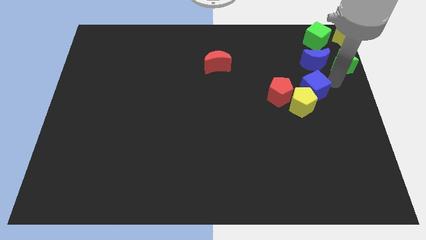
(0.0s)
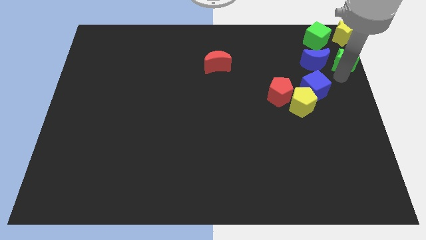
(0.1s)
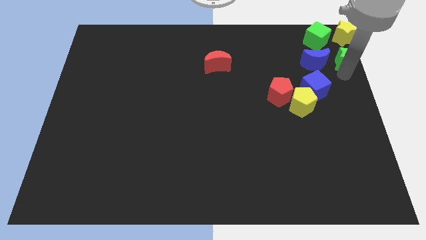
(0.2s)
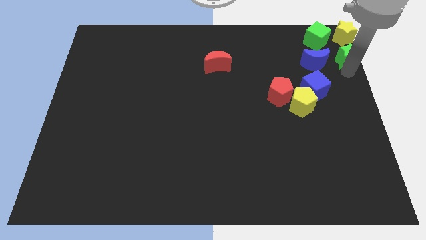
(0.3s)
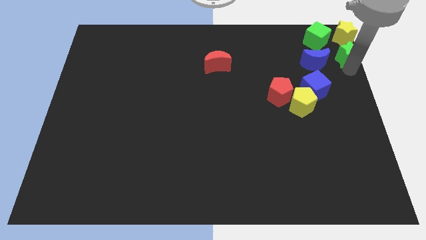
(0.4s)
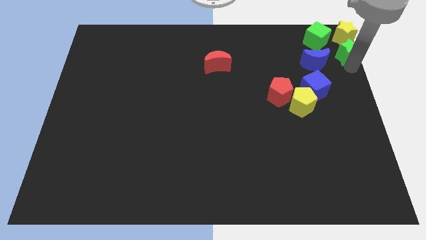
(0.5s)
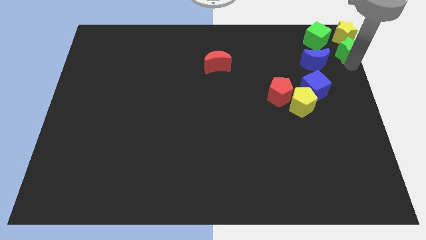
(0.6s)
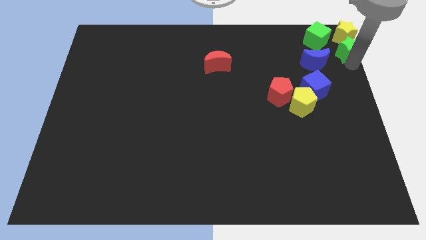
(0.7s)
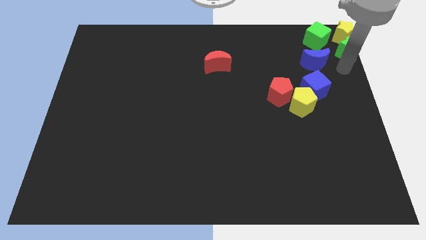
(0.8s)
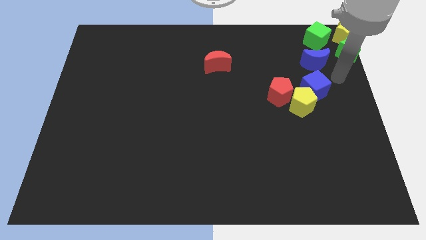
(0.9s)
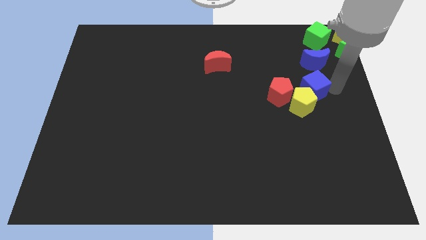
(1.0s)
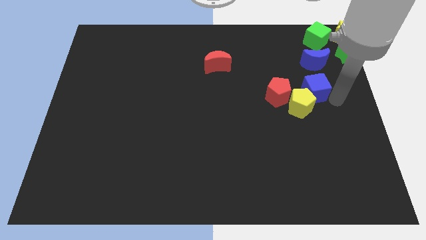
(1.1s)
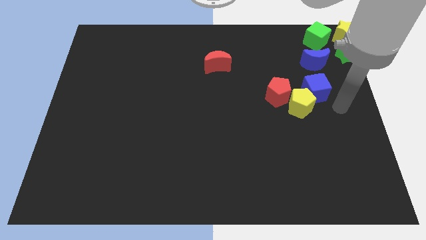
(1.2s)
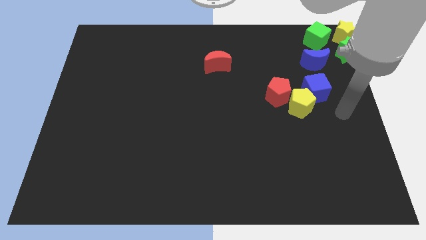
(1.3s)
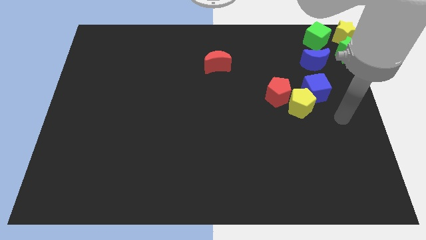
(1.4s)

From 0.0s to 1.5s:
move the green star below the yellow star

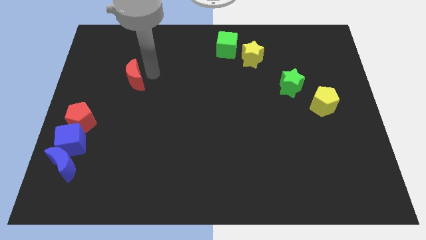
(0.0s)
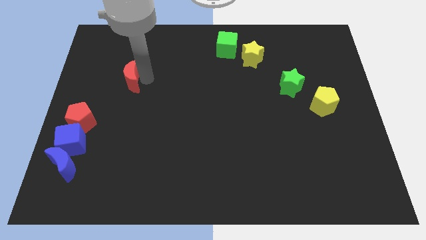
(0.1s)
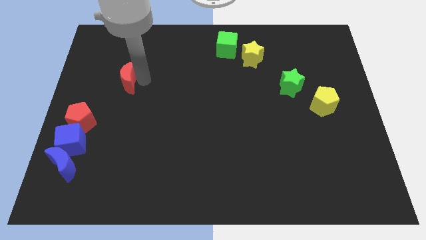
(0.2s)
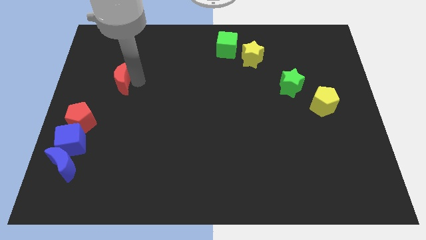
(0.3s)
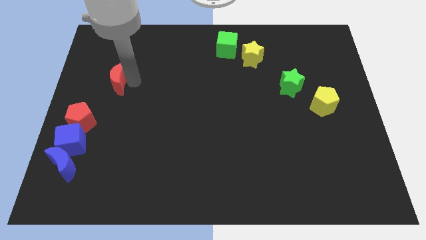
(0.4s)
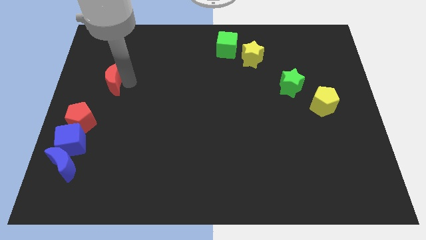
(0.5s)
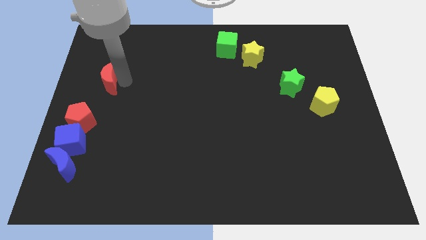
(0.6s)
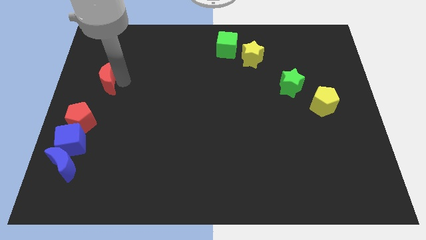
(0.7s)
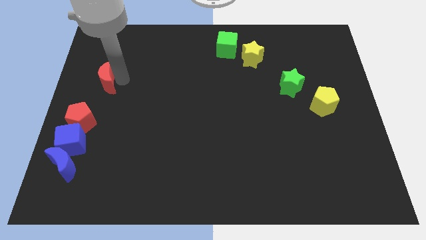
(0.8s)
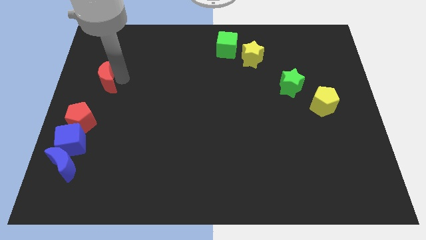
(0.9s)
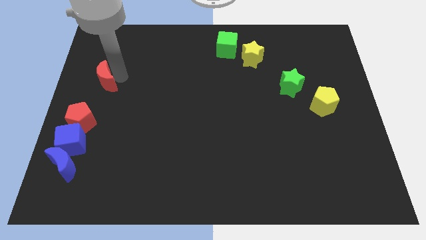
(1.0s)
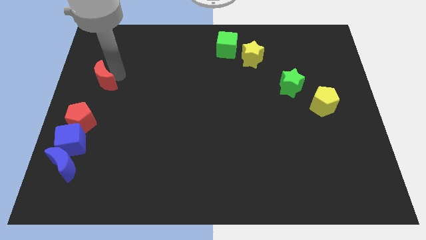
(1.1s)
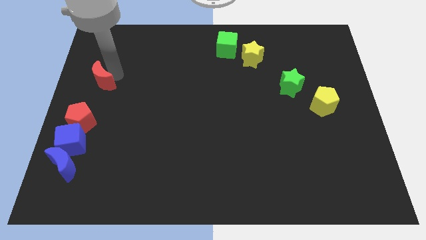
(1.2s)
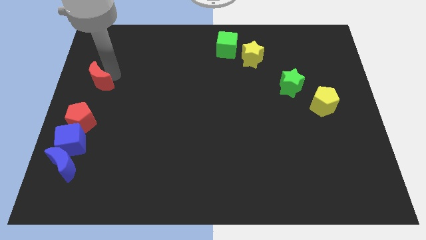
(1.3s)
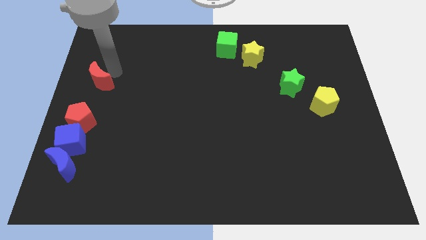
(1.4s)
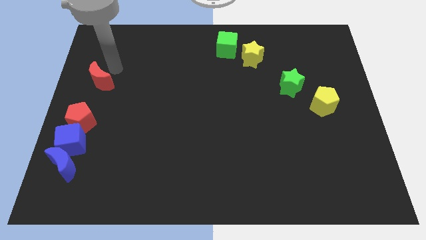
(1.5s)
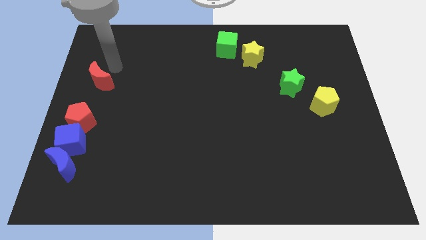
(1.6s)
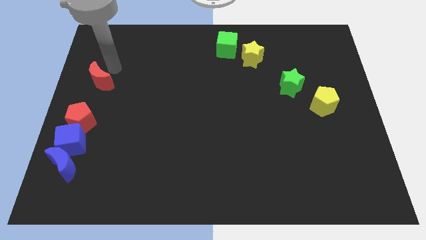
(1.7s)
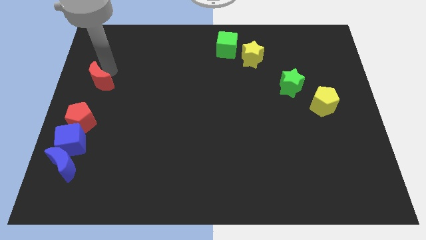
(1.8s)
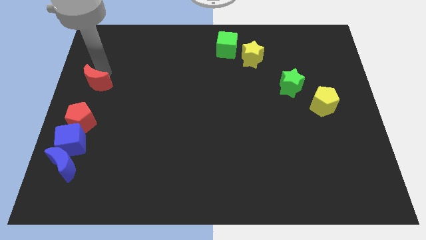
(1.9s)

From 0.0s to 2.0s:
place the red crescent above the red pentagon

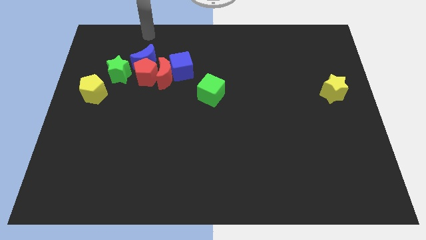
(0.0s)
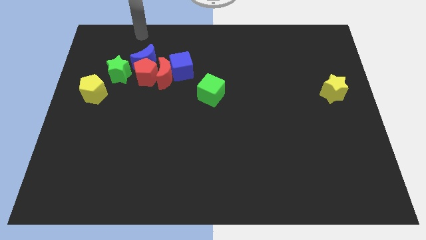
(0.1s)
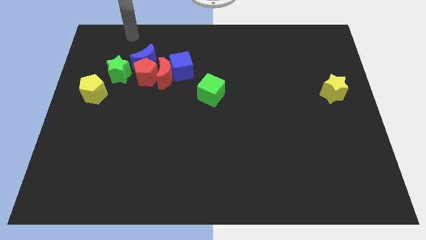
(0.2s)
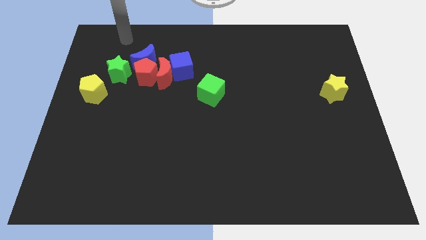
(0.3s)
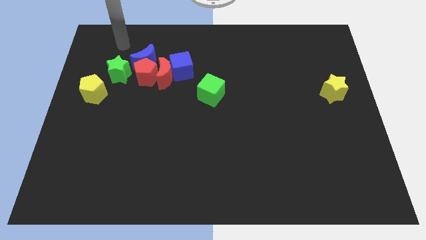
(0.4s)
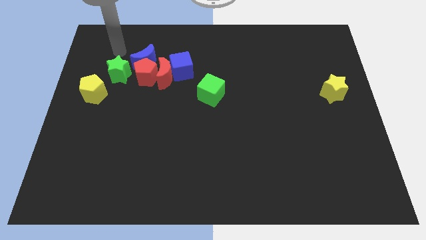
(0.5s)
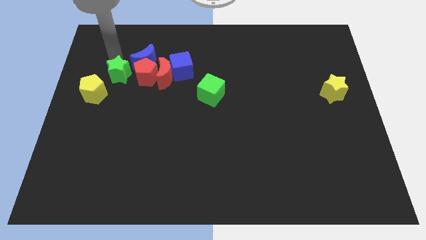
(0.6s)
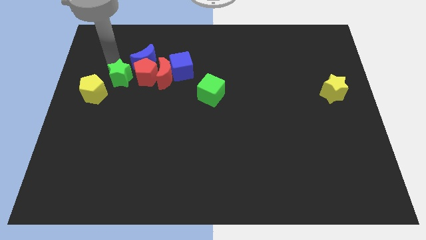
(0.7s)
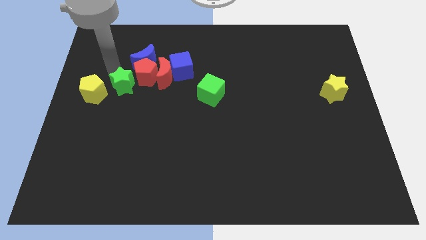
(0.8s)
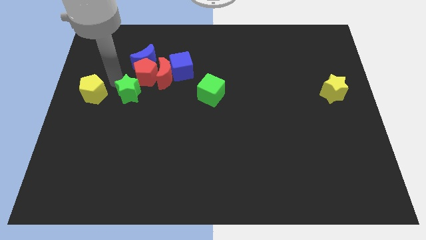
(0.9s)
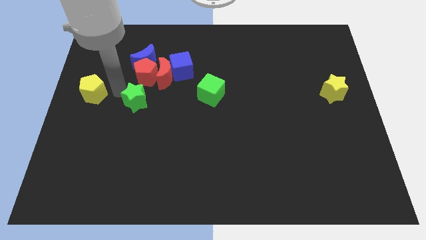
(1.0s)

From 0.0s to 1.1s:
slide green star below the red pentagon

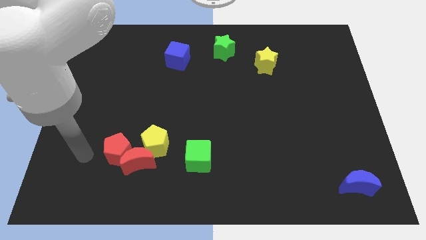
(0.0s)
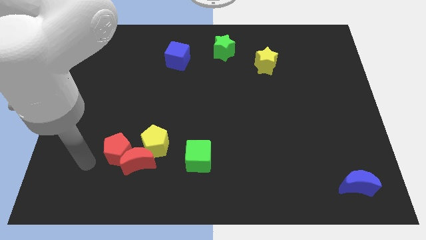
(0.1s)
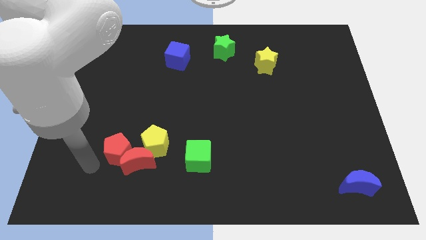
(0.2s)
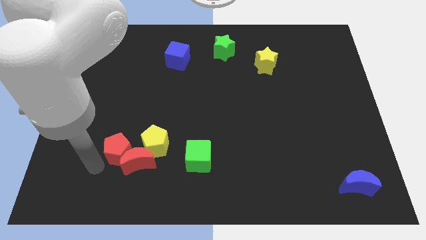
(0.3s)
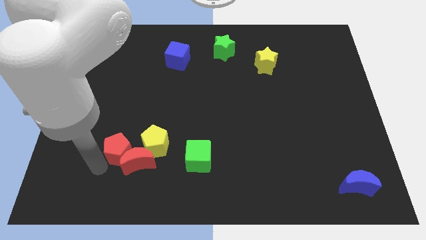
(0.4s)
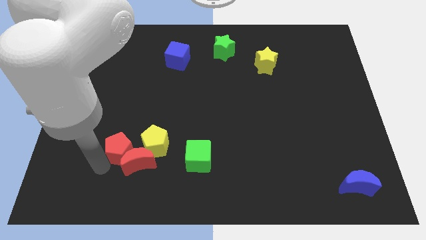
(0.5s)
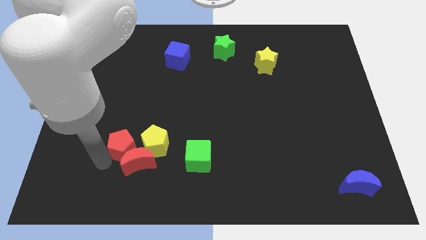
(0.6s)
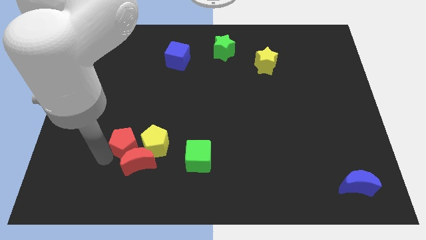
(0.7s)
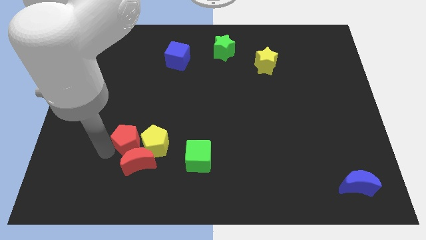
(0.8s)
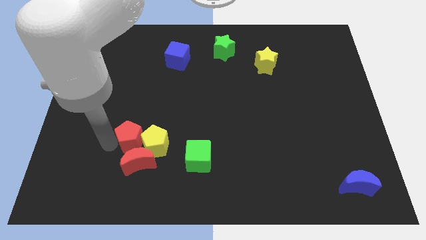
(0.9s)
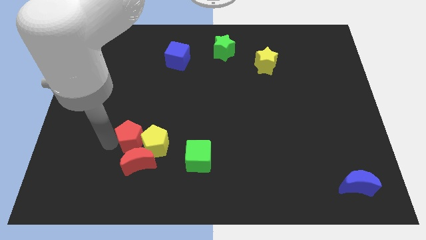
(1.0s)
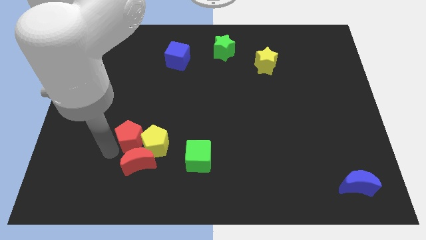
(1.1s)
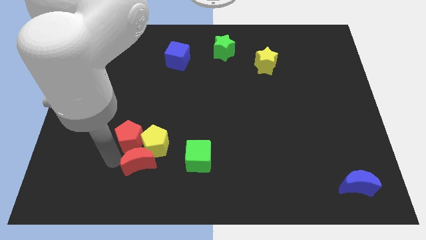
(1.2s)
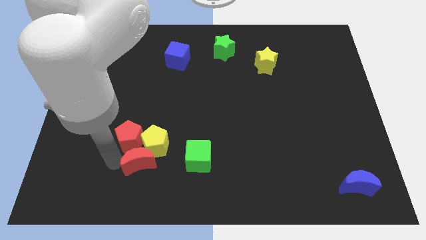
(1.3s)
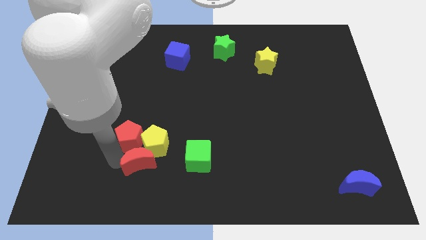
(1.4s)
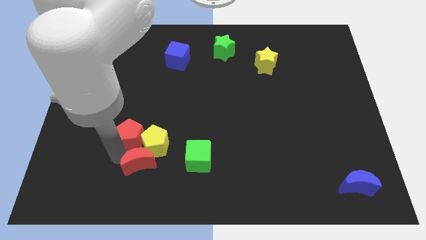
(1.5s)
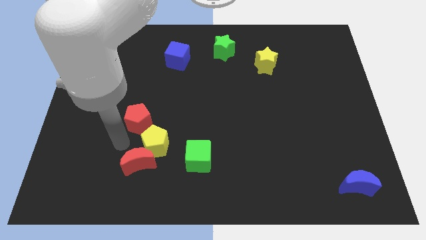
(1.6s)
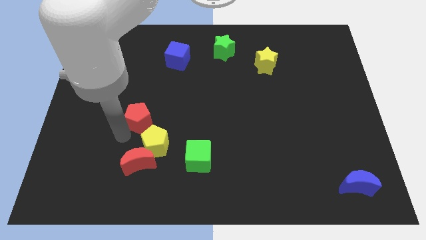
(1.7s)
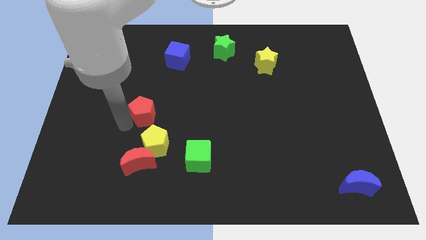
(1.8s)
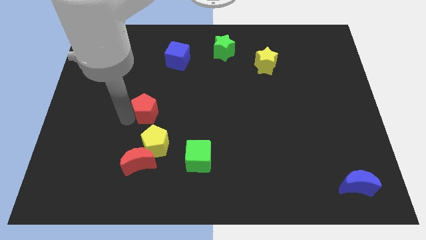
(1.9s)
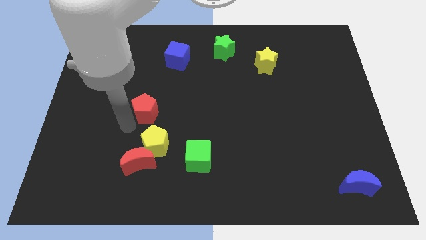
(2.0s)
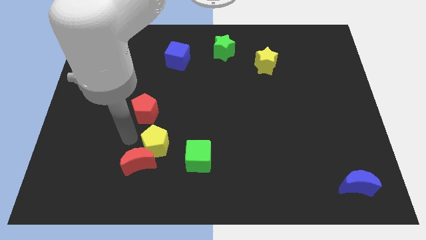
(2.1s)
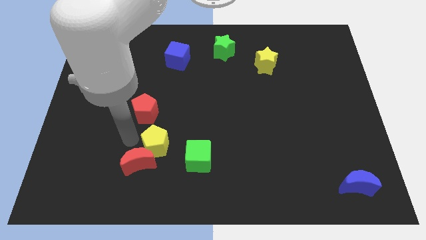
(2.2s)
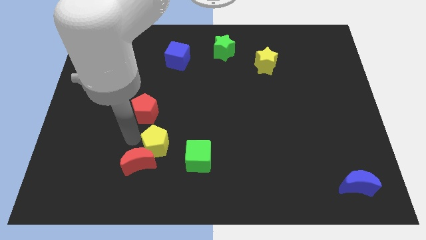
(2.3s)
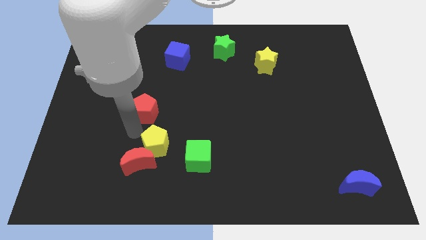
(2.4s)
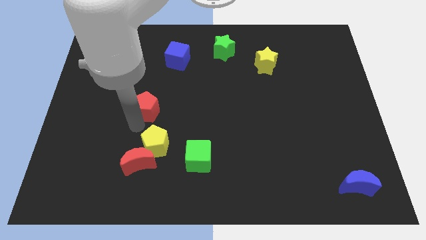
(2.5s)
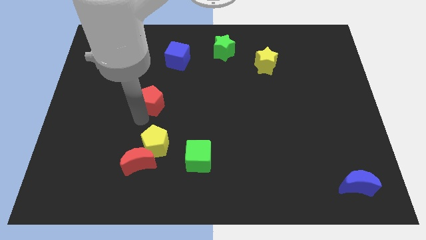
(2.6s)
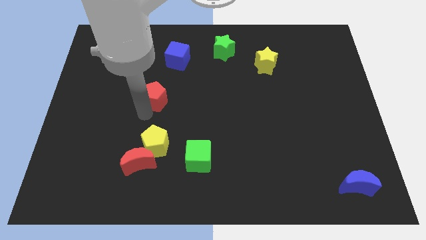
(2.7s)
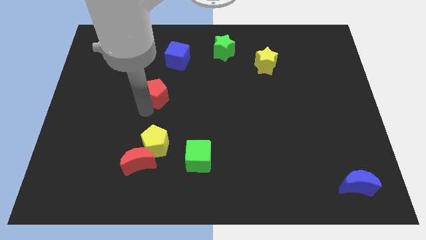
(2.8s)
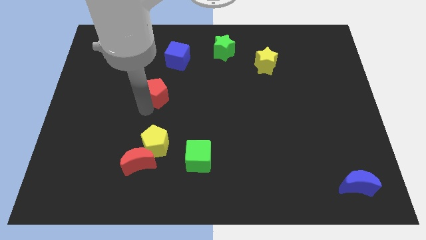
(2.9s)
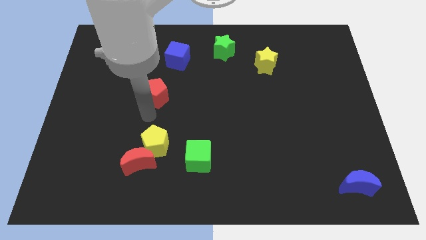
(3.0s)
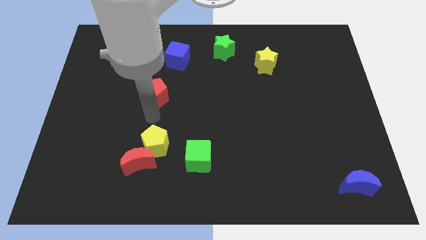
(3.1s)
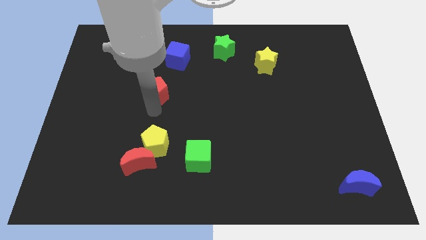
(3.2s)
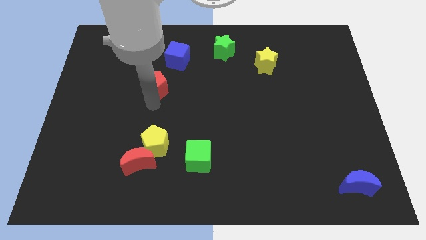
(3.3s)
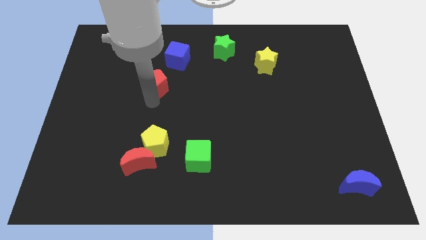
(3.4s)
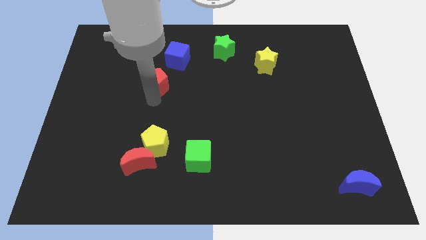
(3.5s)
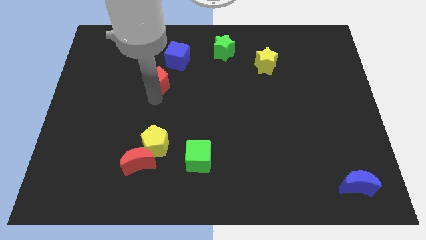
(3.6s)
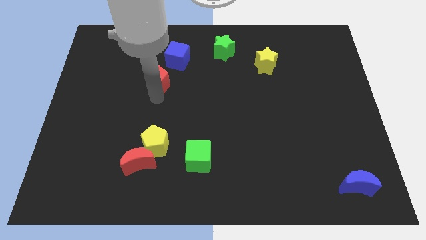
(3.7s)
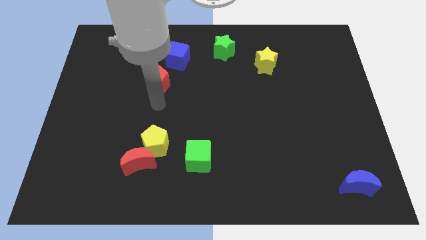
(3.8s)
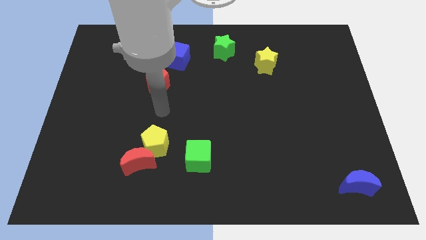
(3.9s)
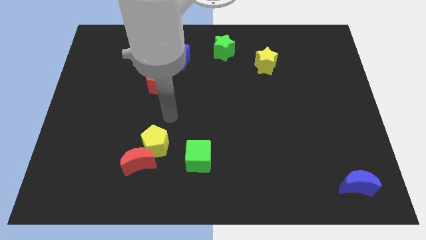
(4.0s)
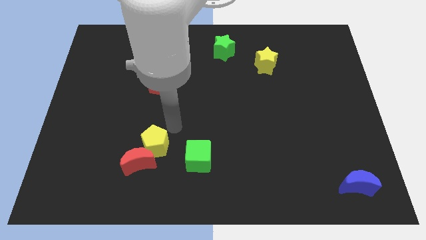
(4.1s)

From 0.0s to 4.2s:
place the red pentagon to the left bottom of the blue cube

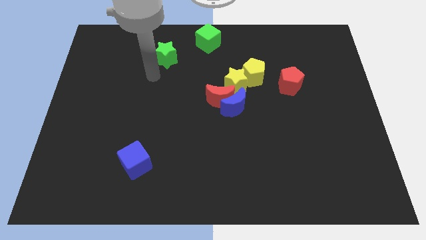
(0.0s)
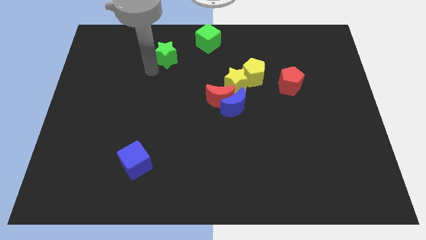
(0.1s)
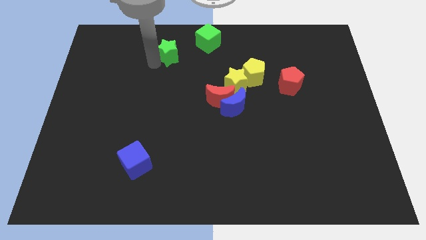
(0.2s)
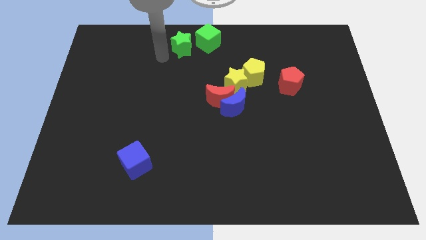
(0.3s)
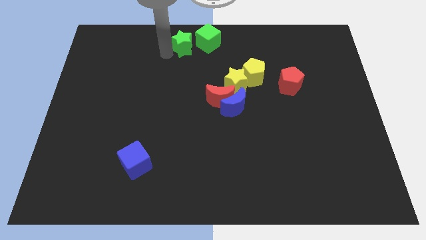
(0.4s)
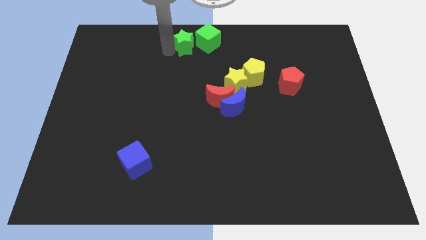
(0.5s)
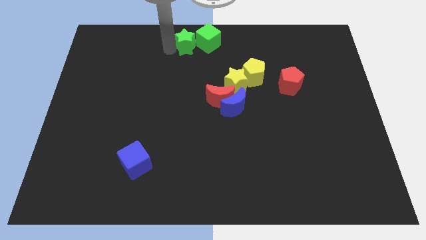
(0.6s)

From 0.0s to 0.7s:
place a green star on the left side of the green cube
